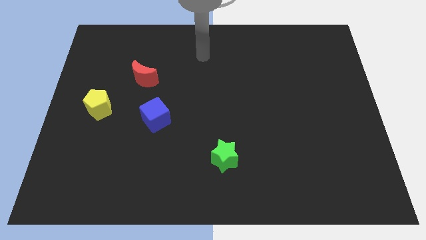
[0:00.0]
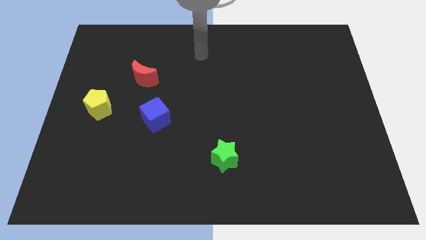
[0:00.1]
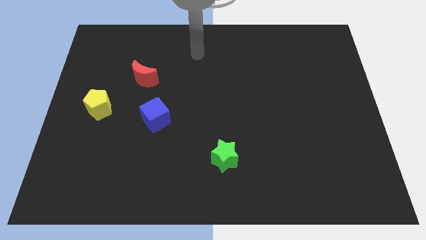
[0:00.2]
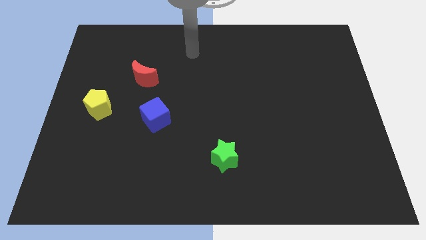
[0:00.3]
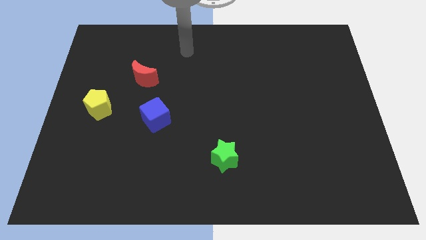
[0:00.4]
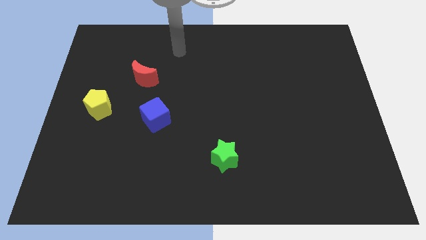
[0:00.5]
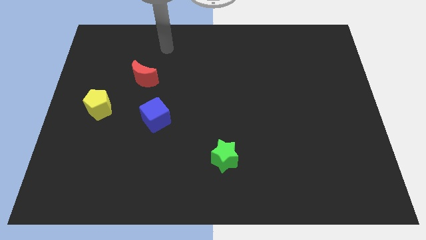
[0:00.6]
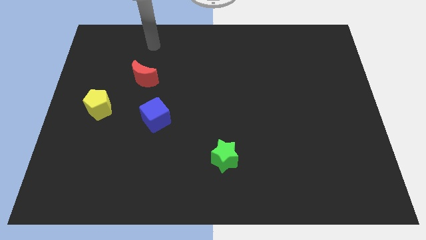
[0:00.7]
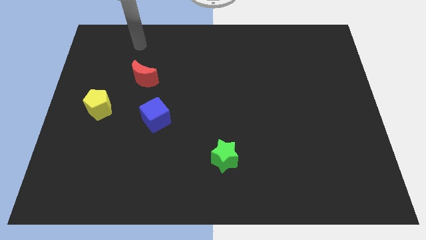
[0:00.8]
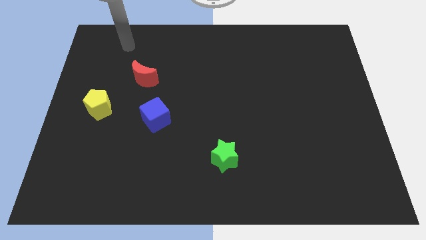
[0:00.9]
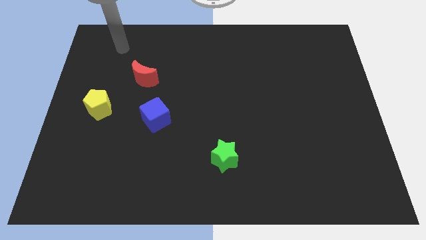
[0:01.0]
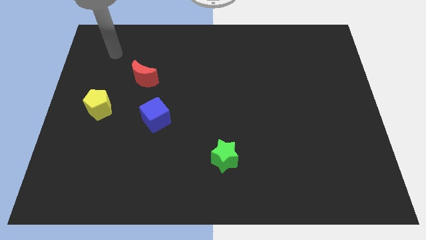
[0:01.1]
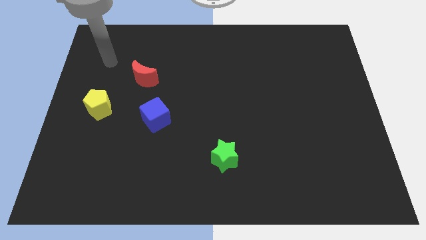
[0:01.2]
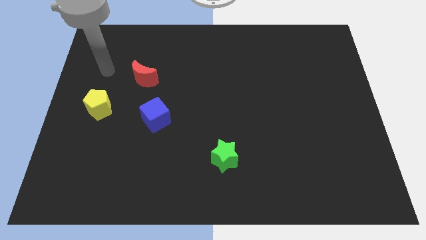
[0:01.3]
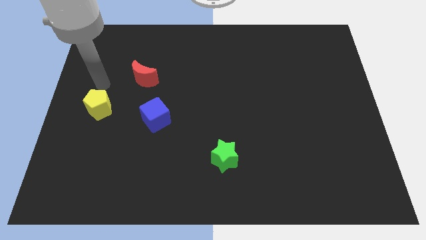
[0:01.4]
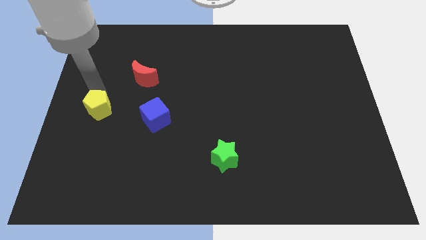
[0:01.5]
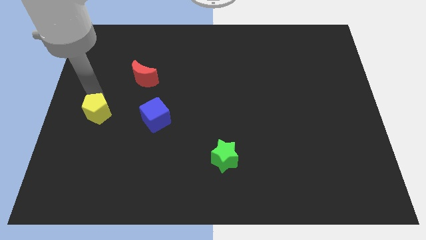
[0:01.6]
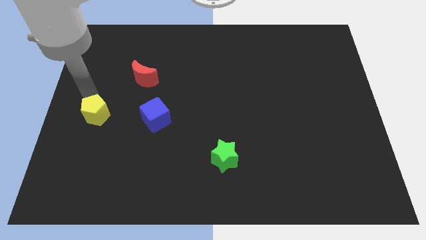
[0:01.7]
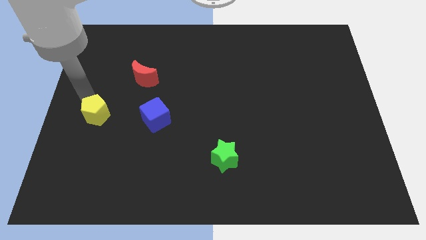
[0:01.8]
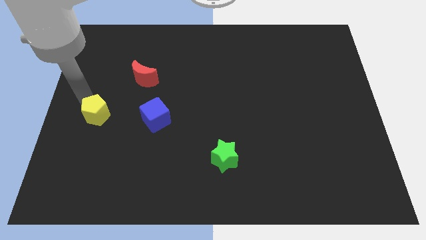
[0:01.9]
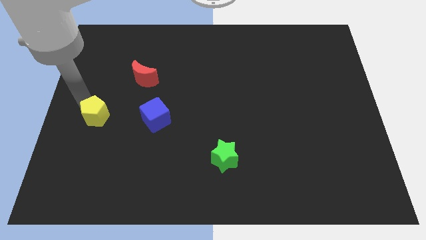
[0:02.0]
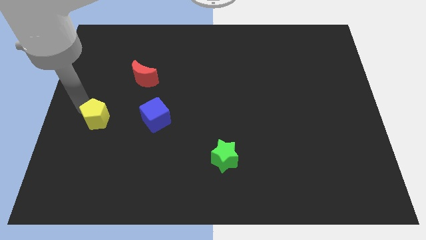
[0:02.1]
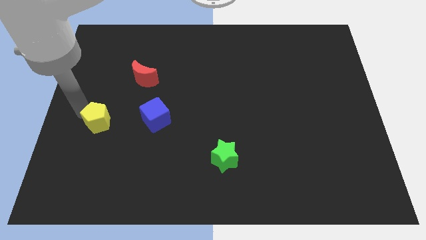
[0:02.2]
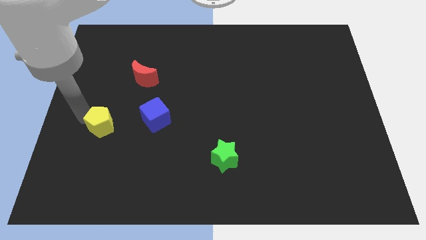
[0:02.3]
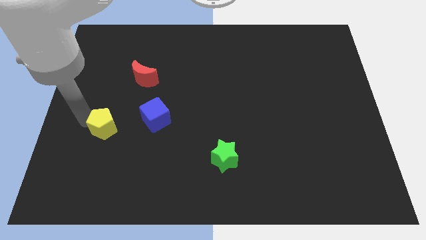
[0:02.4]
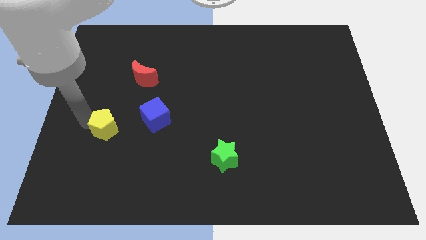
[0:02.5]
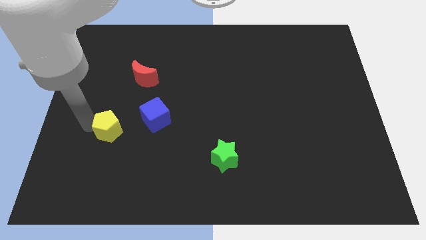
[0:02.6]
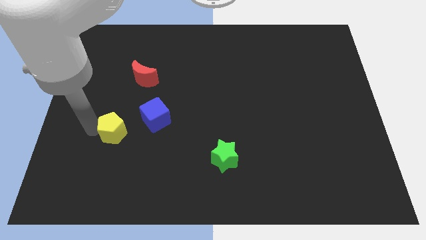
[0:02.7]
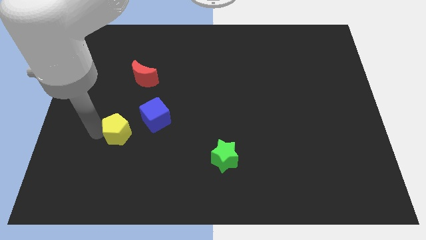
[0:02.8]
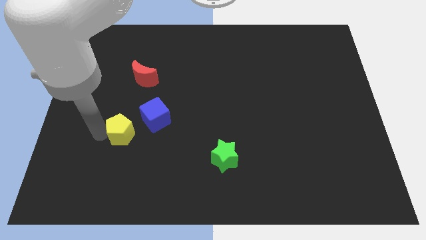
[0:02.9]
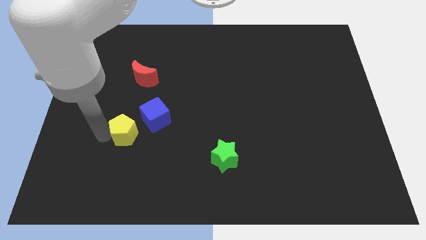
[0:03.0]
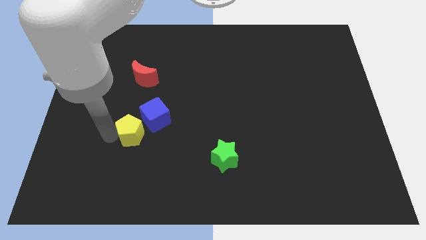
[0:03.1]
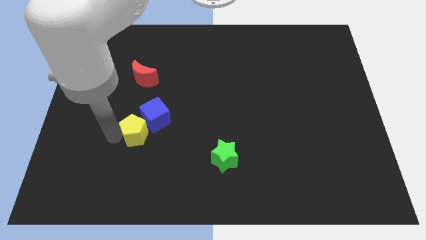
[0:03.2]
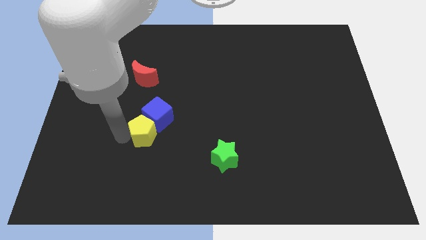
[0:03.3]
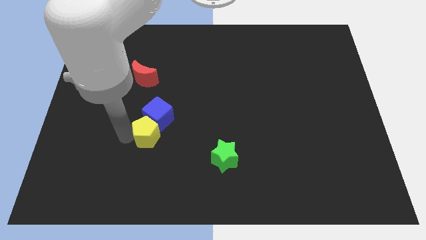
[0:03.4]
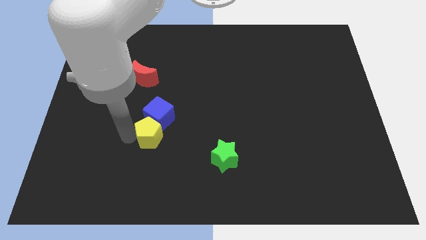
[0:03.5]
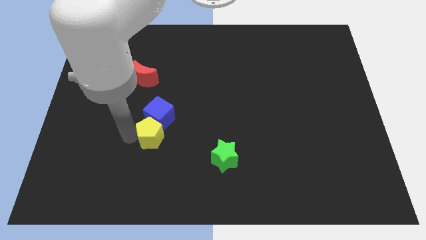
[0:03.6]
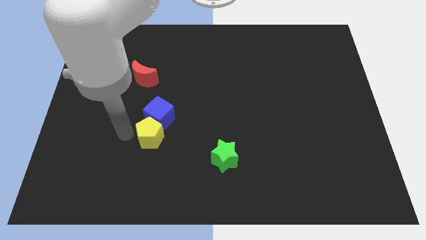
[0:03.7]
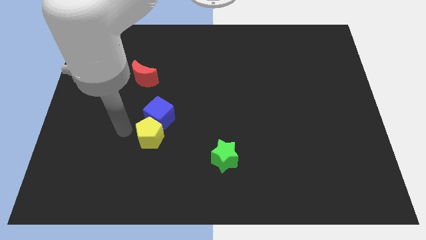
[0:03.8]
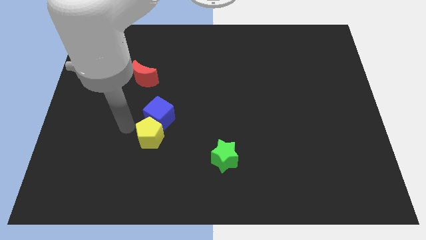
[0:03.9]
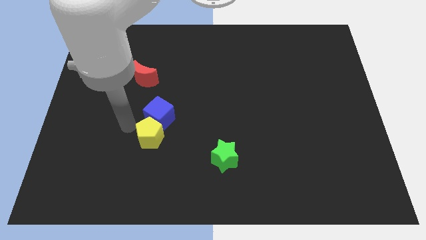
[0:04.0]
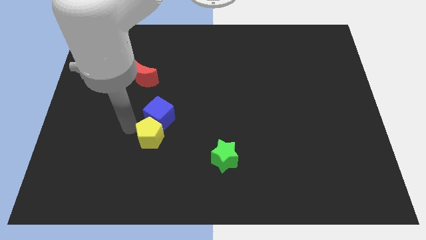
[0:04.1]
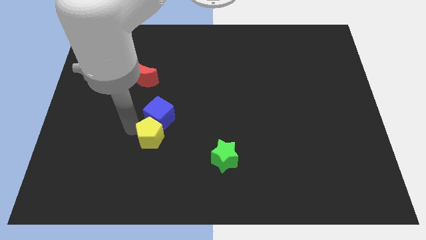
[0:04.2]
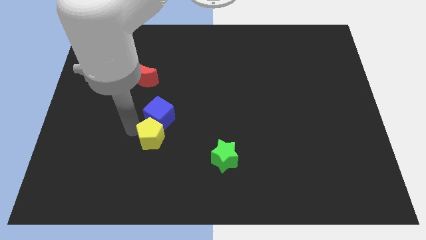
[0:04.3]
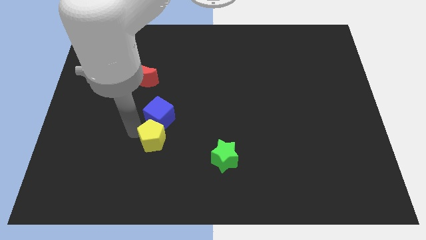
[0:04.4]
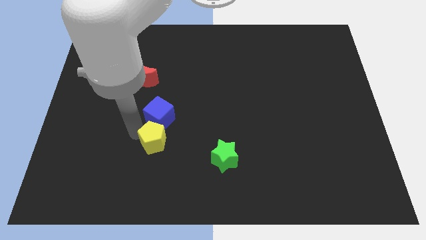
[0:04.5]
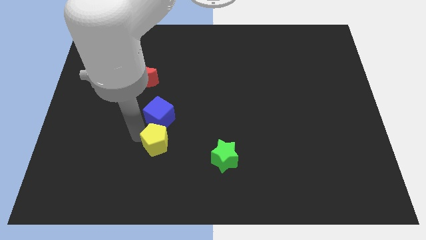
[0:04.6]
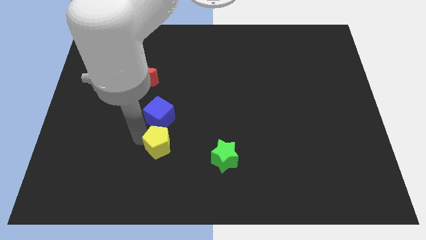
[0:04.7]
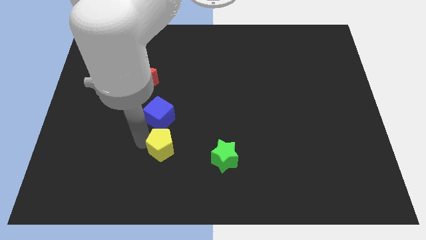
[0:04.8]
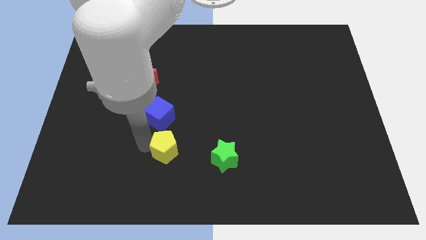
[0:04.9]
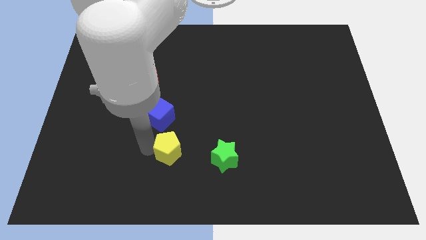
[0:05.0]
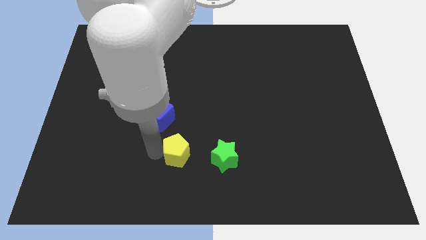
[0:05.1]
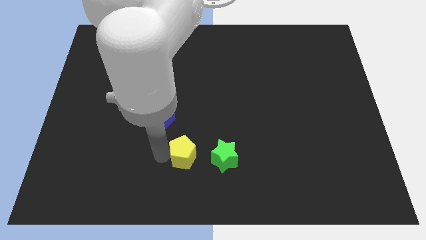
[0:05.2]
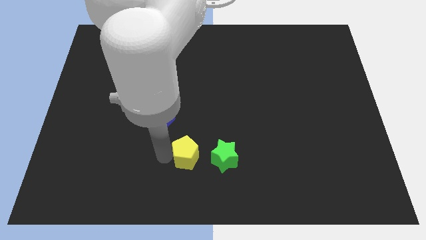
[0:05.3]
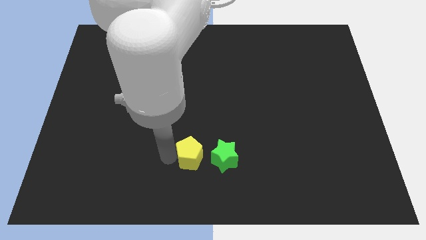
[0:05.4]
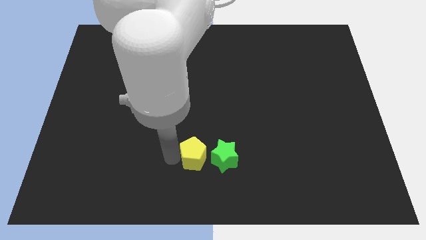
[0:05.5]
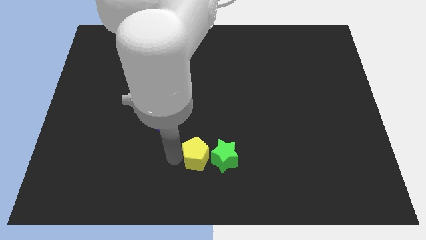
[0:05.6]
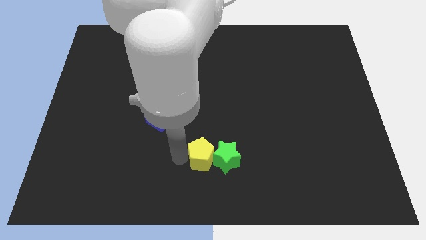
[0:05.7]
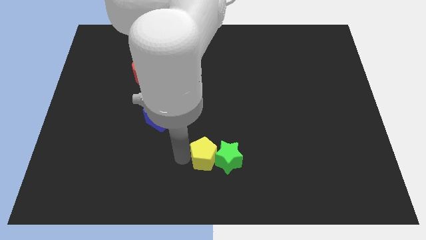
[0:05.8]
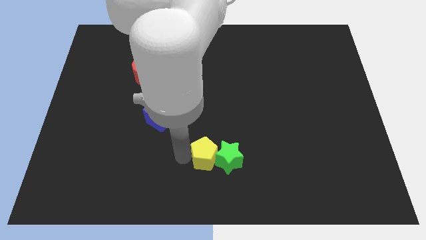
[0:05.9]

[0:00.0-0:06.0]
put the yellow block to the star

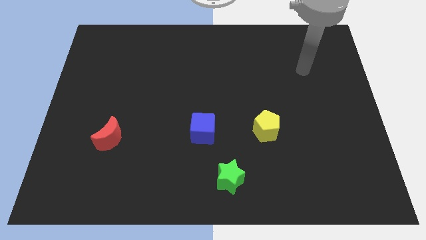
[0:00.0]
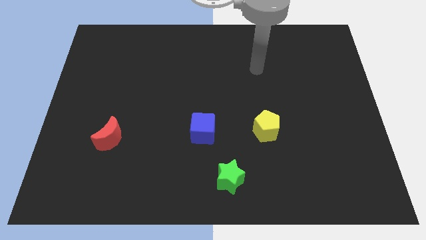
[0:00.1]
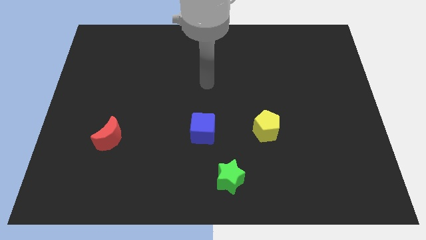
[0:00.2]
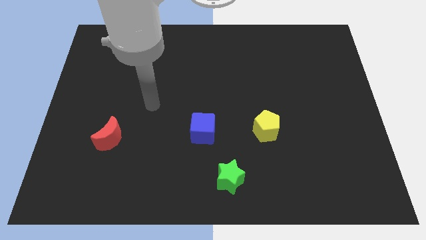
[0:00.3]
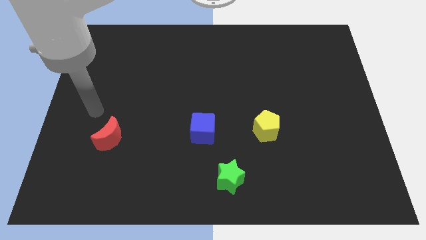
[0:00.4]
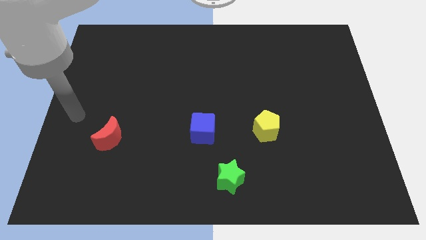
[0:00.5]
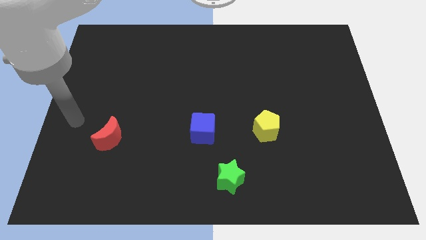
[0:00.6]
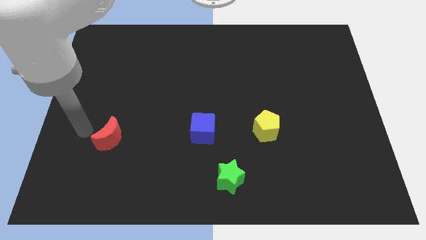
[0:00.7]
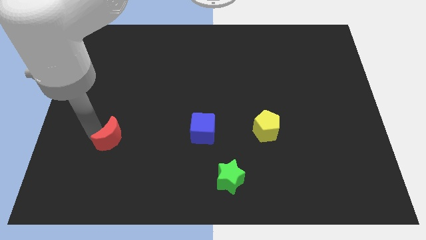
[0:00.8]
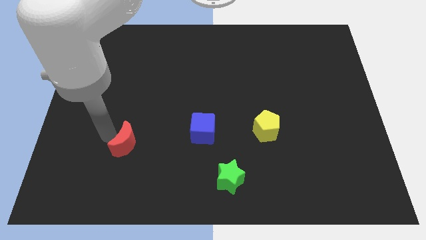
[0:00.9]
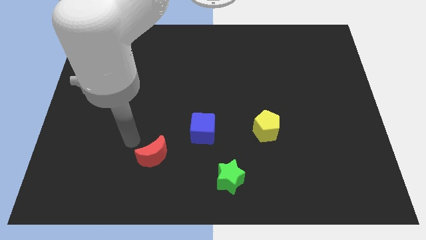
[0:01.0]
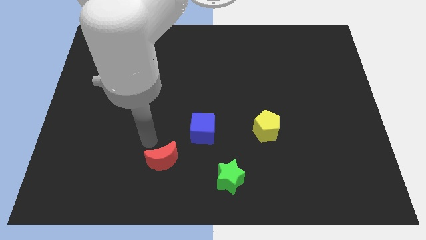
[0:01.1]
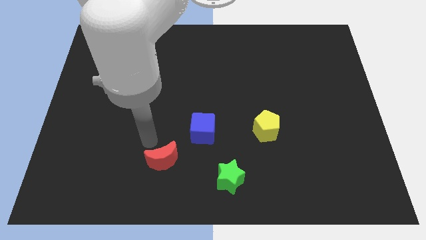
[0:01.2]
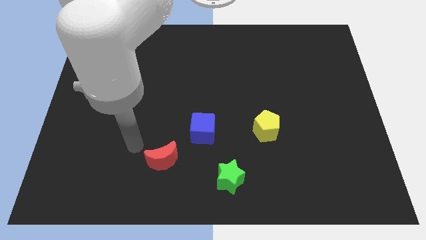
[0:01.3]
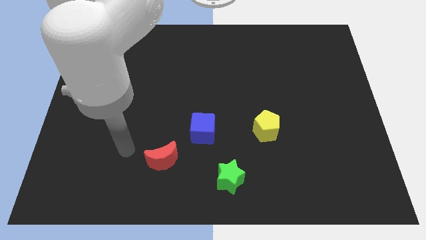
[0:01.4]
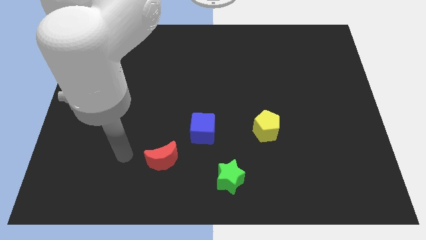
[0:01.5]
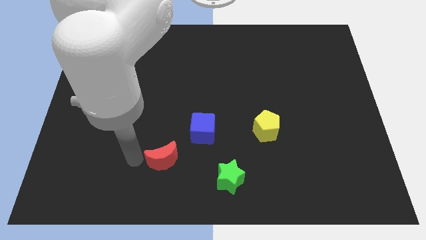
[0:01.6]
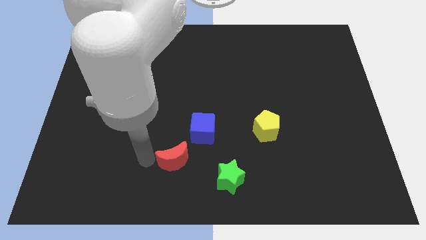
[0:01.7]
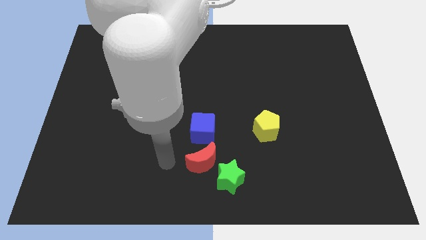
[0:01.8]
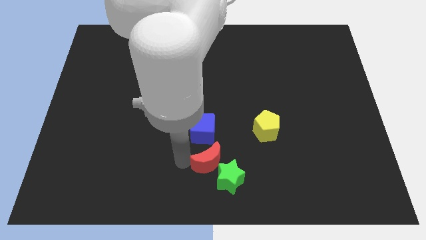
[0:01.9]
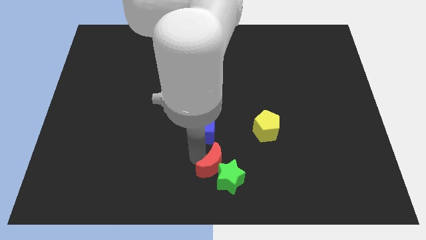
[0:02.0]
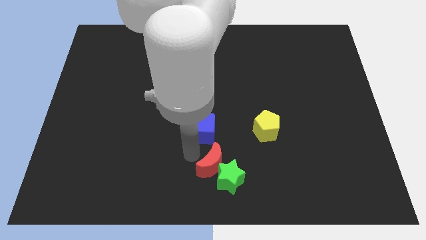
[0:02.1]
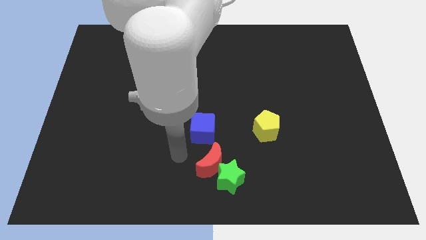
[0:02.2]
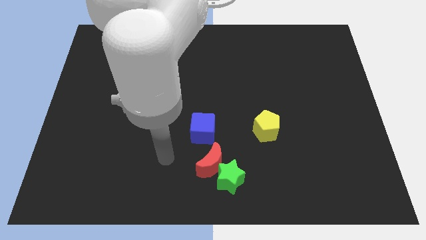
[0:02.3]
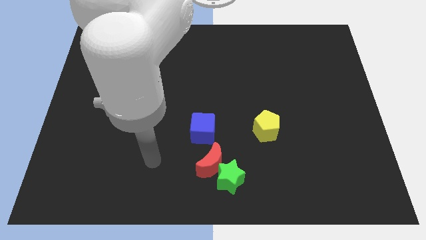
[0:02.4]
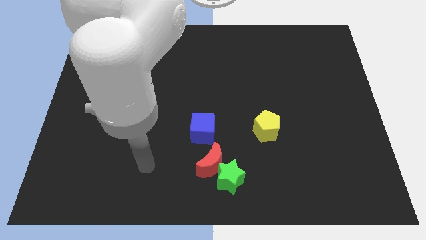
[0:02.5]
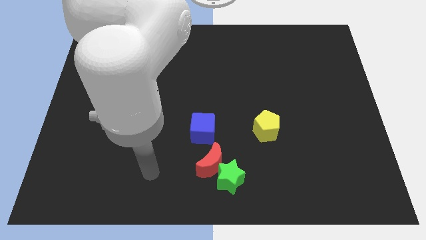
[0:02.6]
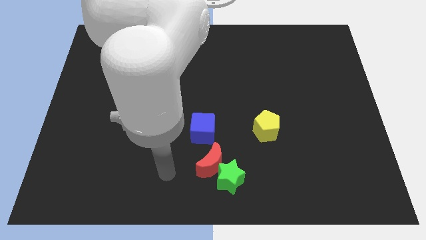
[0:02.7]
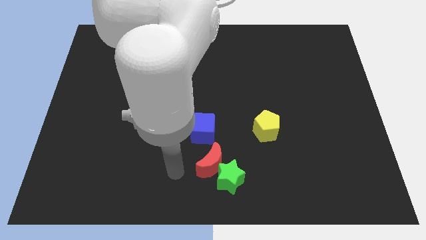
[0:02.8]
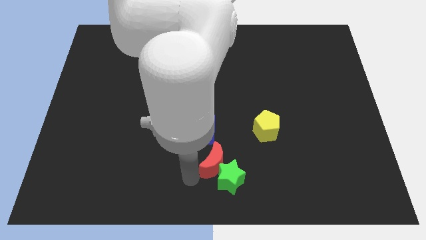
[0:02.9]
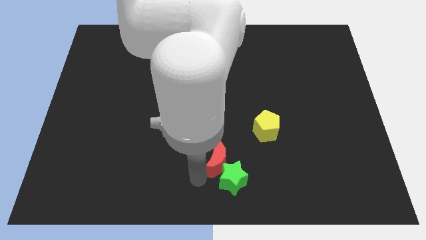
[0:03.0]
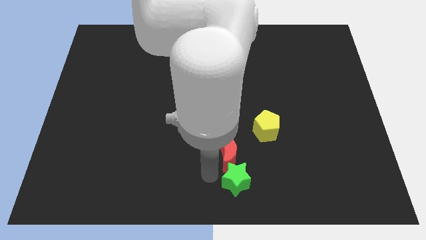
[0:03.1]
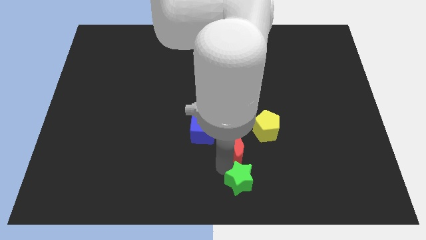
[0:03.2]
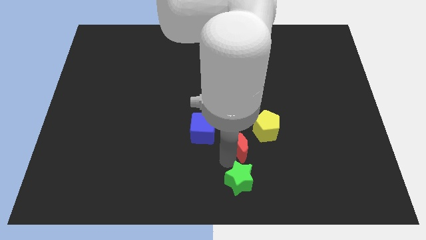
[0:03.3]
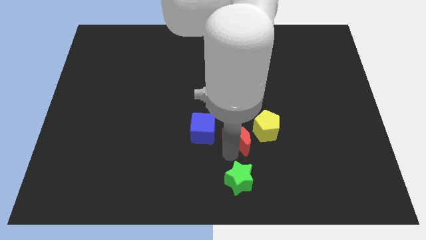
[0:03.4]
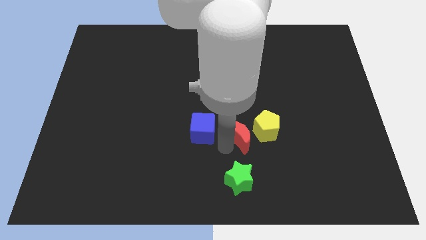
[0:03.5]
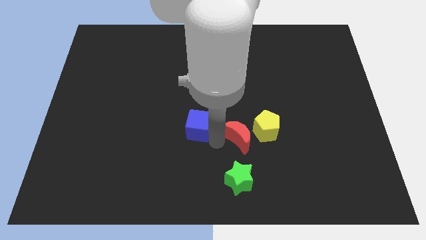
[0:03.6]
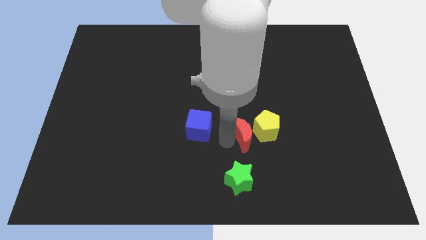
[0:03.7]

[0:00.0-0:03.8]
put the red moon to the yellow pentagon
